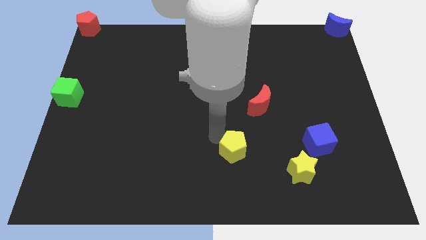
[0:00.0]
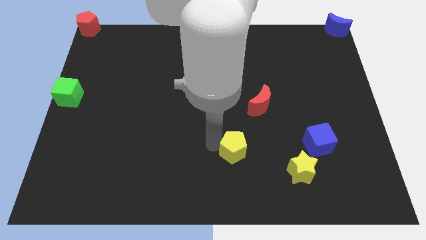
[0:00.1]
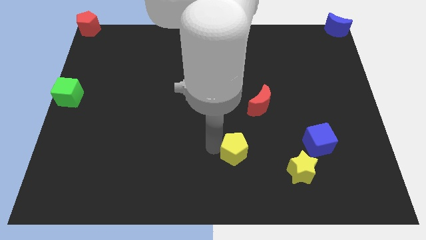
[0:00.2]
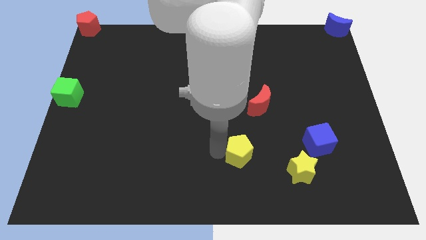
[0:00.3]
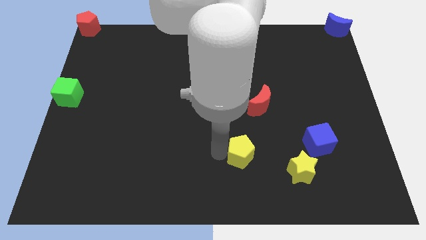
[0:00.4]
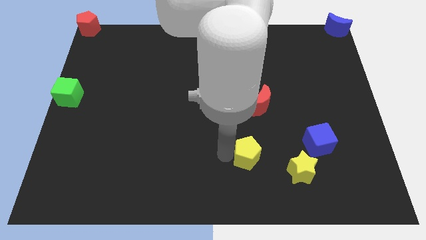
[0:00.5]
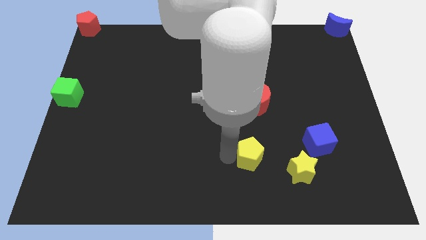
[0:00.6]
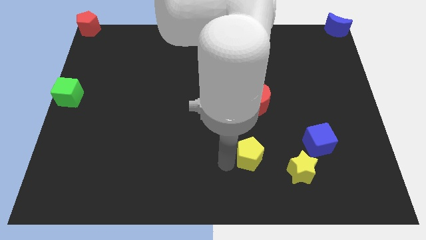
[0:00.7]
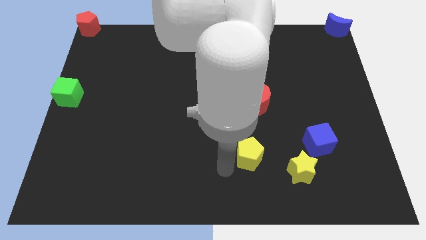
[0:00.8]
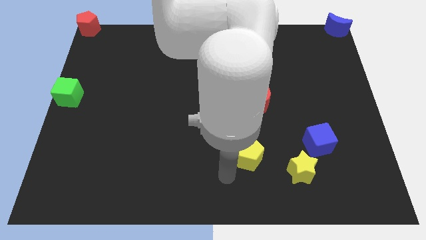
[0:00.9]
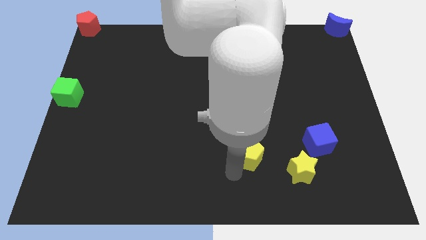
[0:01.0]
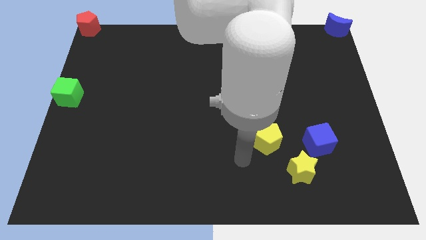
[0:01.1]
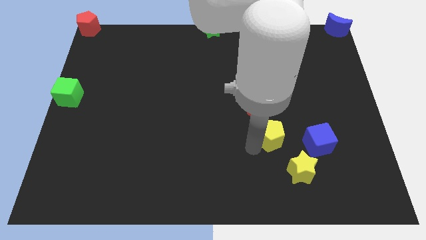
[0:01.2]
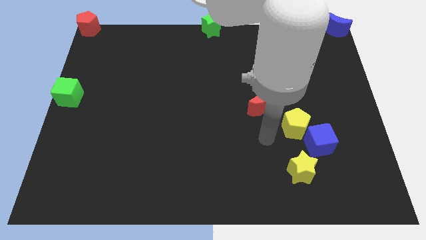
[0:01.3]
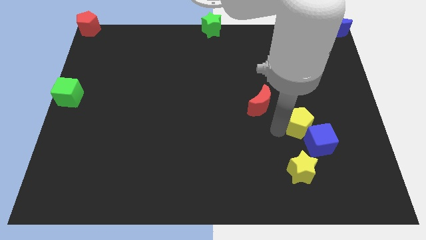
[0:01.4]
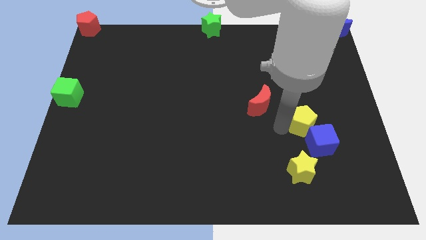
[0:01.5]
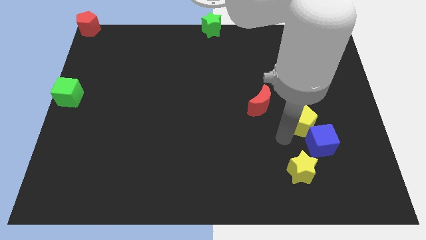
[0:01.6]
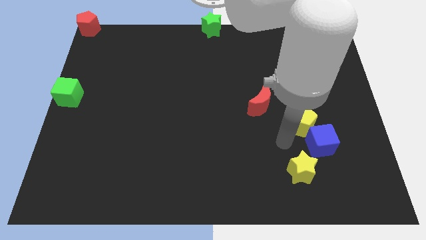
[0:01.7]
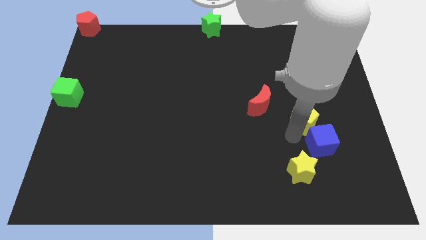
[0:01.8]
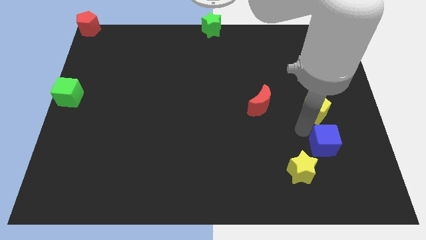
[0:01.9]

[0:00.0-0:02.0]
move the yellow pentagon above to the blue cube

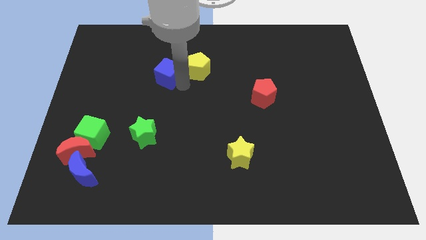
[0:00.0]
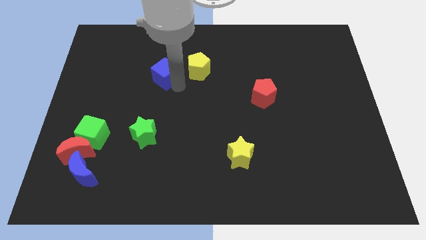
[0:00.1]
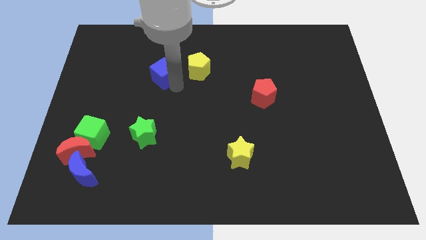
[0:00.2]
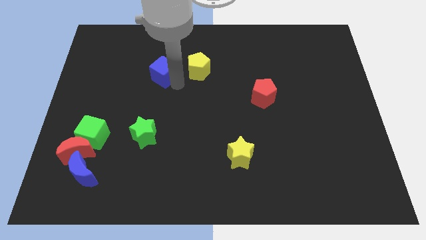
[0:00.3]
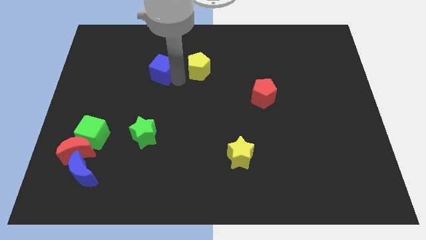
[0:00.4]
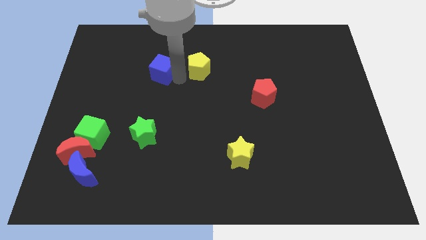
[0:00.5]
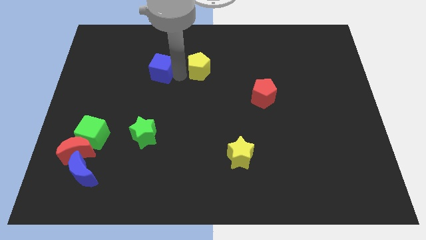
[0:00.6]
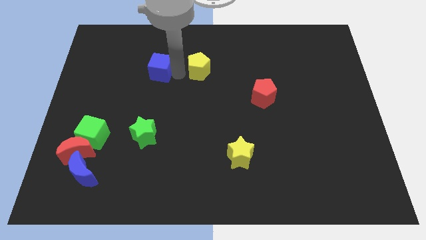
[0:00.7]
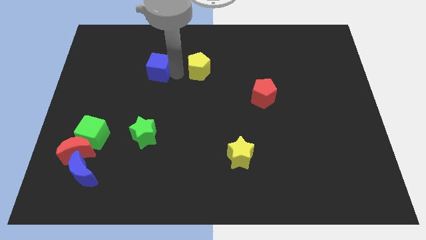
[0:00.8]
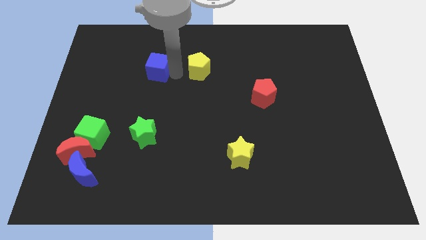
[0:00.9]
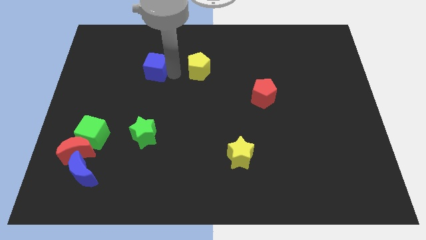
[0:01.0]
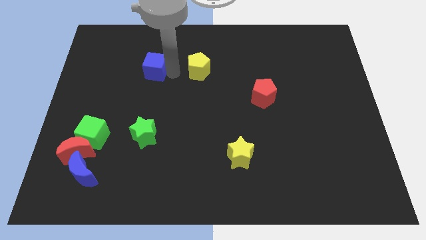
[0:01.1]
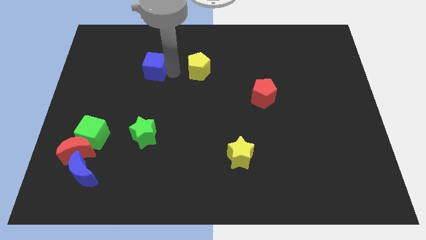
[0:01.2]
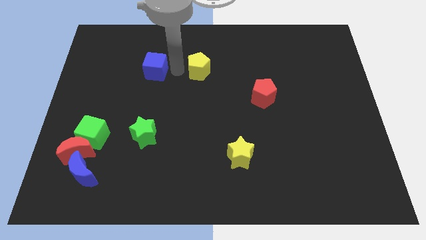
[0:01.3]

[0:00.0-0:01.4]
place the blue cube parallel to the yellow pentagon

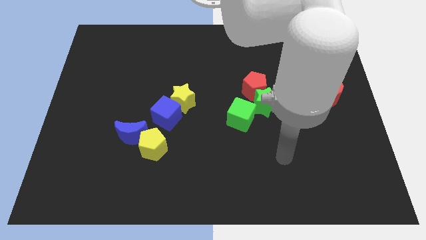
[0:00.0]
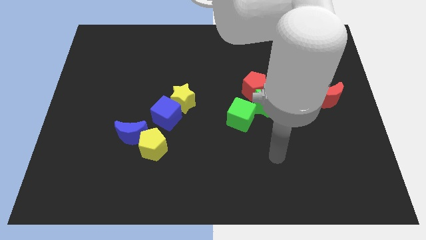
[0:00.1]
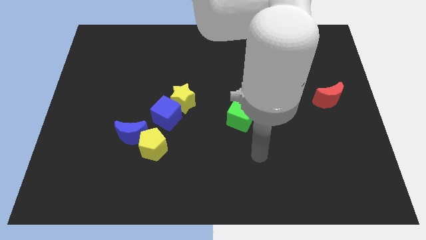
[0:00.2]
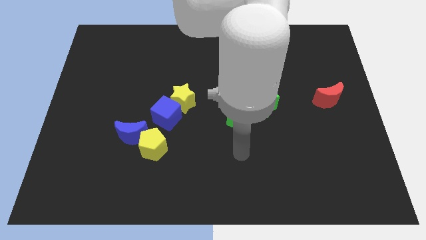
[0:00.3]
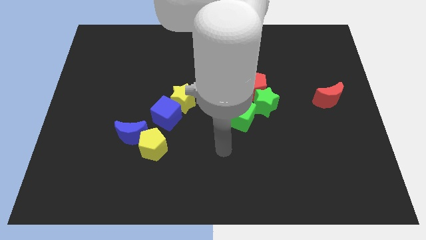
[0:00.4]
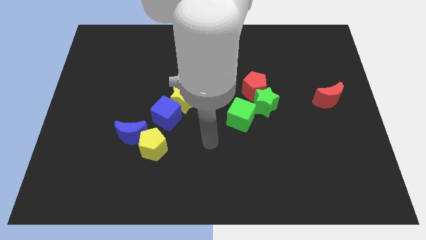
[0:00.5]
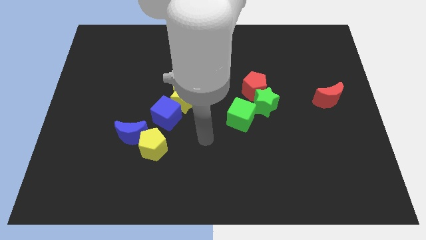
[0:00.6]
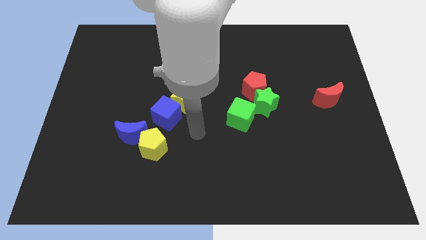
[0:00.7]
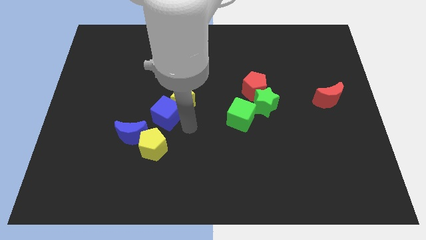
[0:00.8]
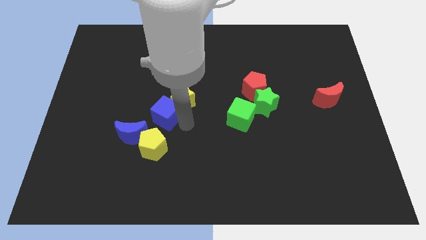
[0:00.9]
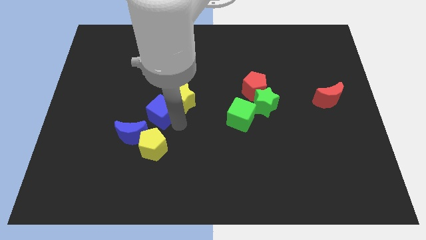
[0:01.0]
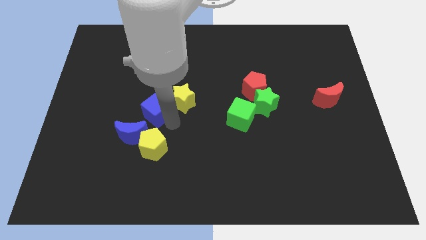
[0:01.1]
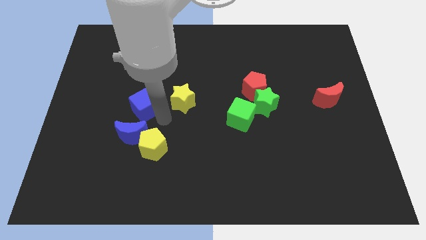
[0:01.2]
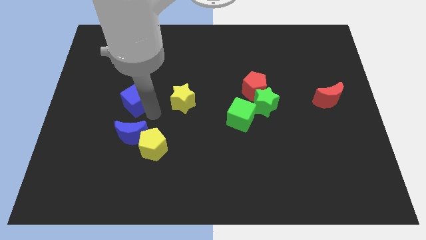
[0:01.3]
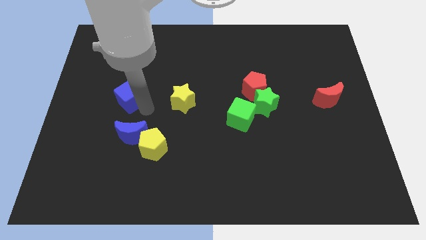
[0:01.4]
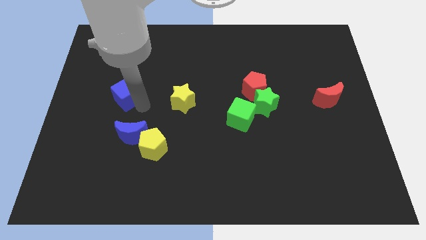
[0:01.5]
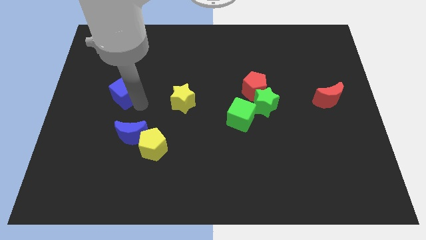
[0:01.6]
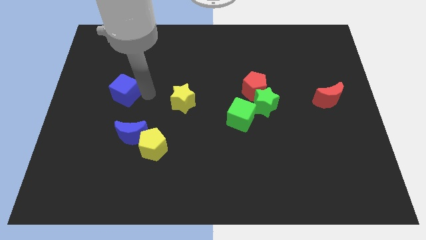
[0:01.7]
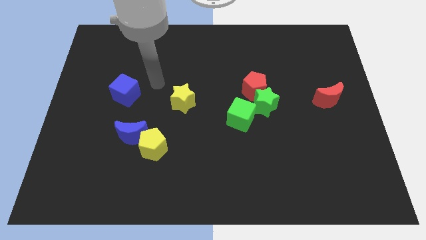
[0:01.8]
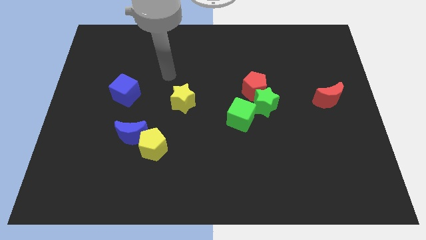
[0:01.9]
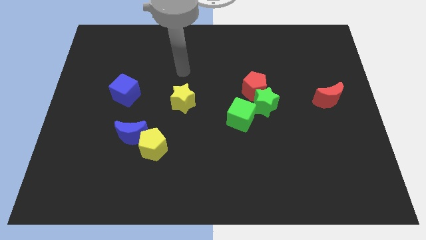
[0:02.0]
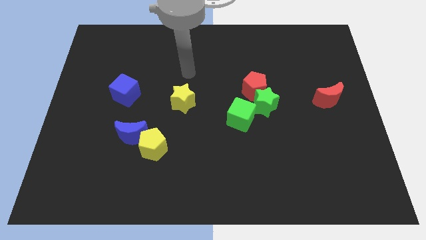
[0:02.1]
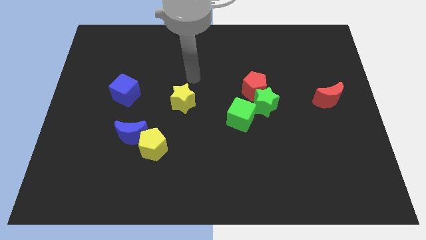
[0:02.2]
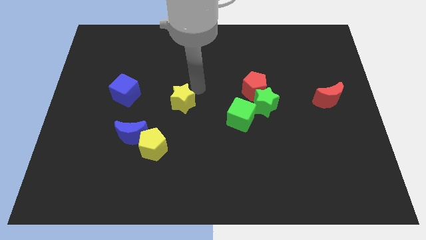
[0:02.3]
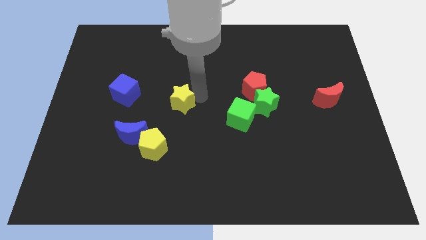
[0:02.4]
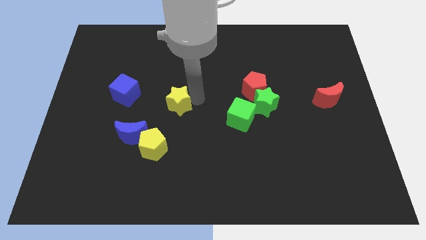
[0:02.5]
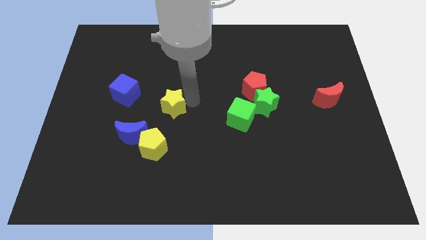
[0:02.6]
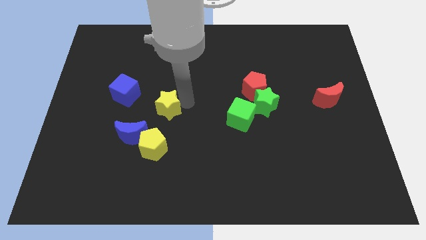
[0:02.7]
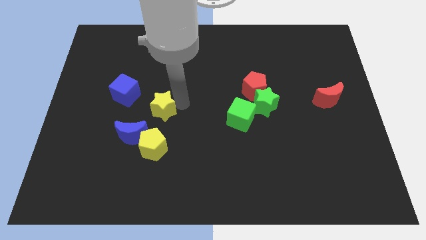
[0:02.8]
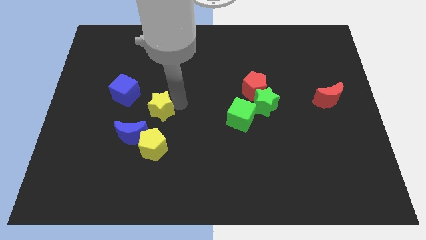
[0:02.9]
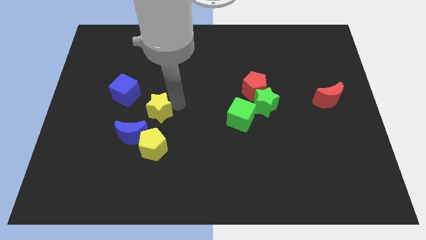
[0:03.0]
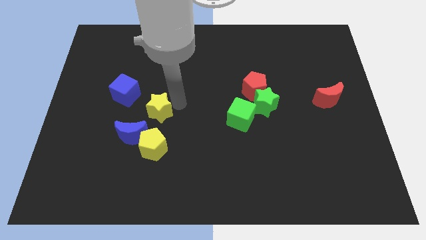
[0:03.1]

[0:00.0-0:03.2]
push blue cube to left and yellow star above yellow pentagon

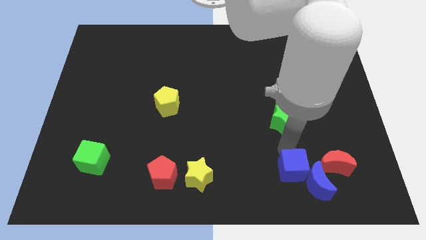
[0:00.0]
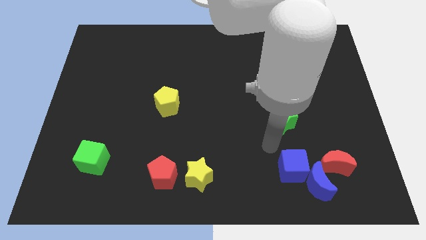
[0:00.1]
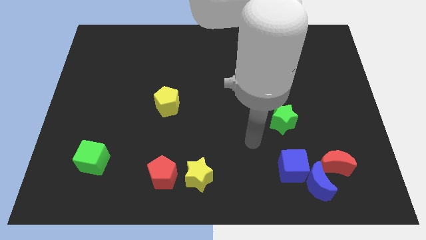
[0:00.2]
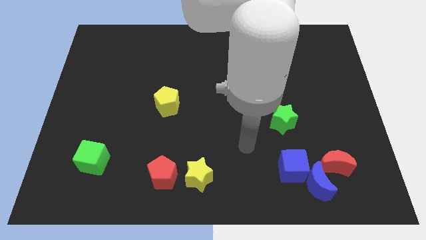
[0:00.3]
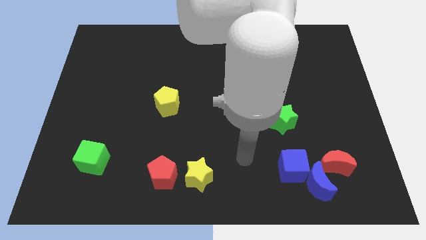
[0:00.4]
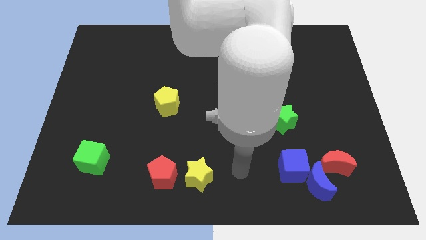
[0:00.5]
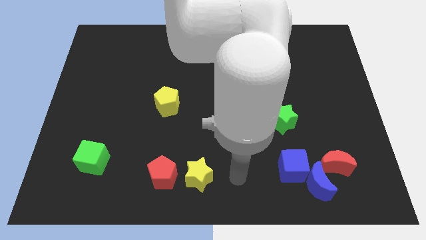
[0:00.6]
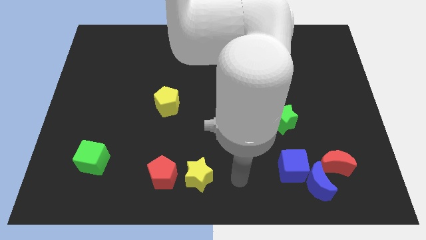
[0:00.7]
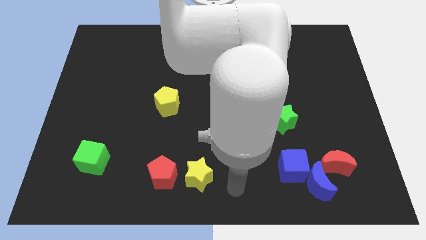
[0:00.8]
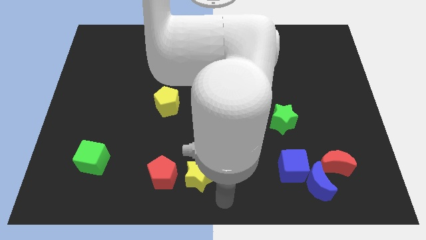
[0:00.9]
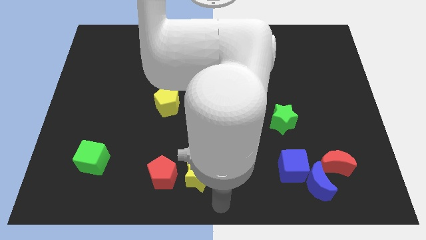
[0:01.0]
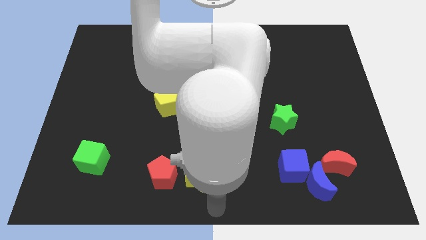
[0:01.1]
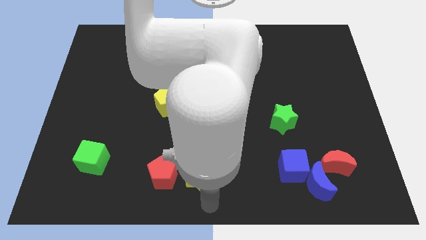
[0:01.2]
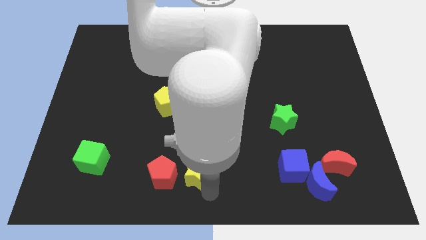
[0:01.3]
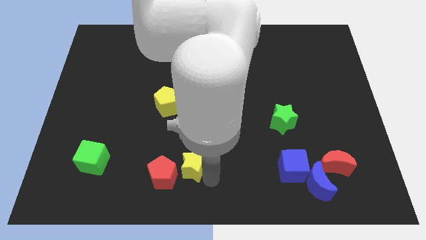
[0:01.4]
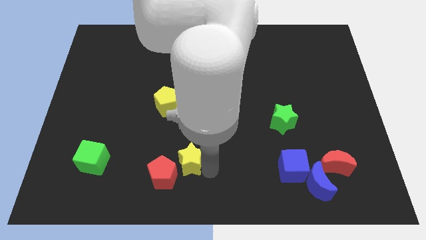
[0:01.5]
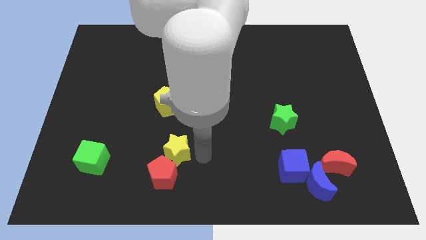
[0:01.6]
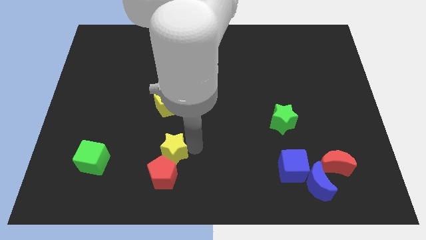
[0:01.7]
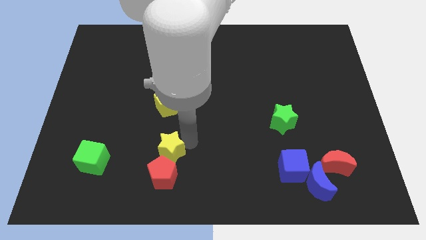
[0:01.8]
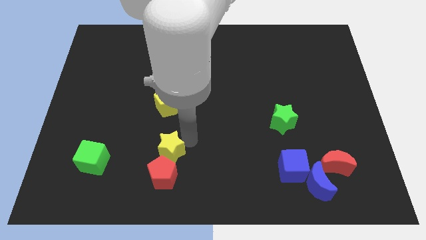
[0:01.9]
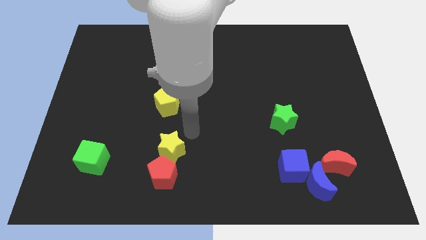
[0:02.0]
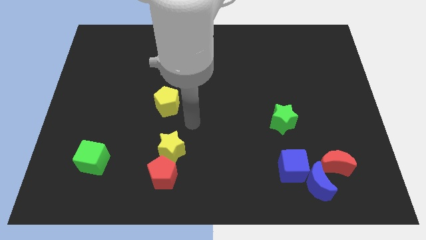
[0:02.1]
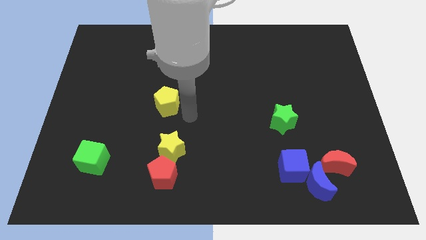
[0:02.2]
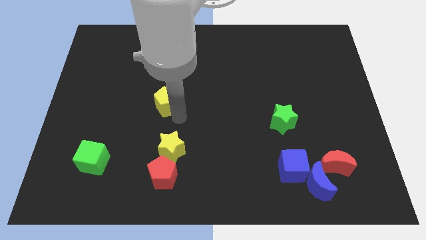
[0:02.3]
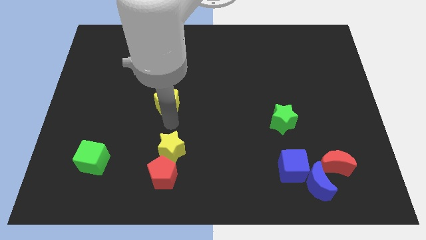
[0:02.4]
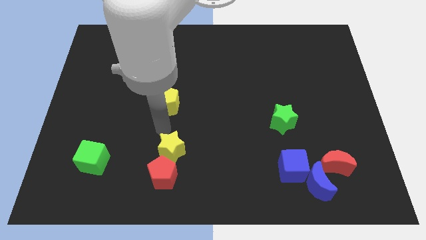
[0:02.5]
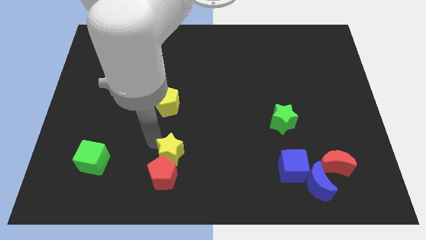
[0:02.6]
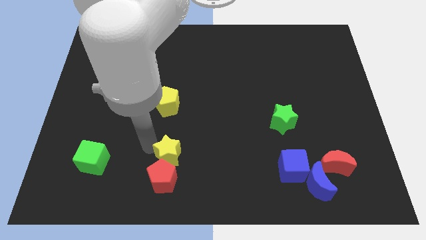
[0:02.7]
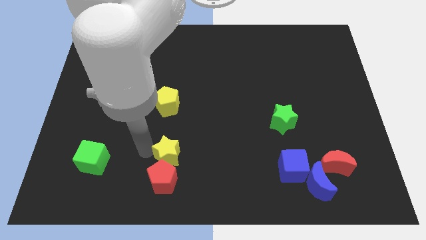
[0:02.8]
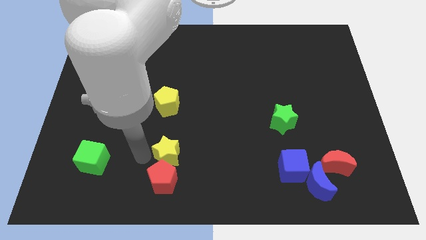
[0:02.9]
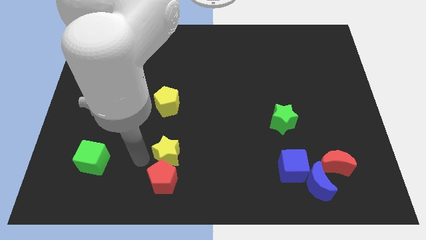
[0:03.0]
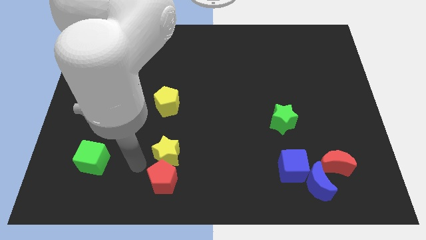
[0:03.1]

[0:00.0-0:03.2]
place the yellow star above the red pentagon
